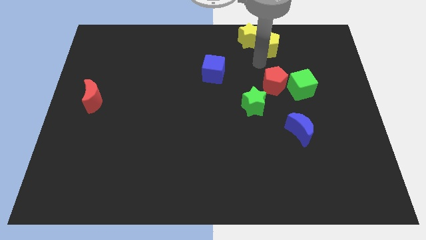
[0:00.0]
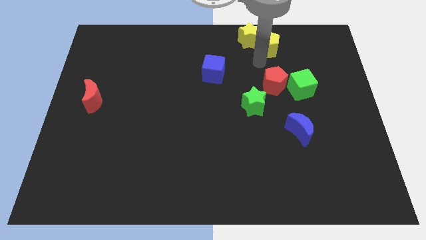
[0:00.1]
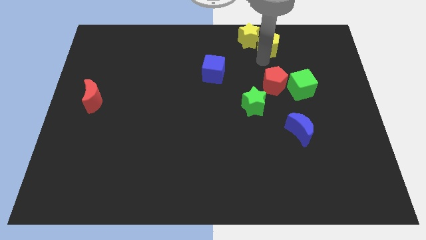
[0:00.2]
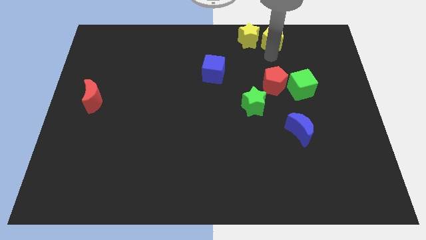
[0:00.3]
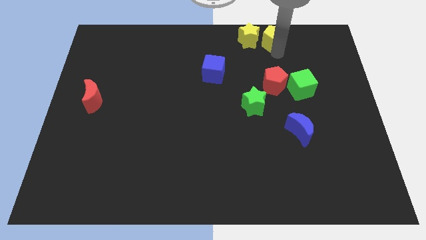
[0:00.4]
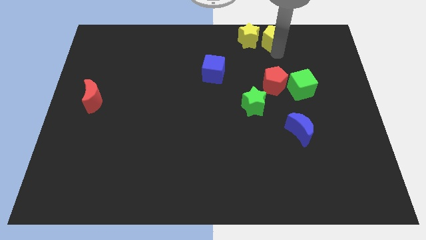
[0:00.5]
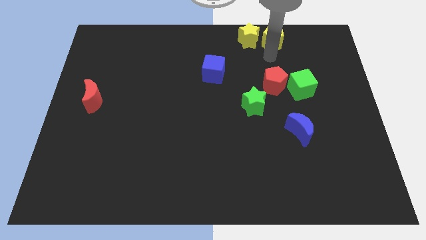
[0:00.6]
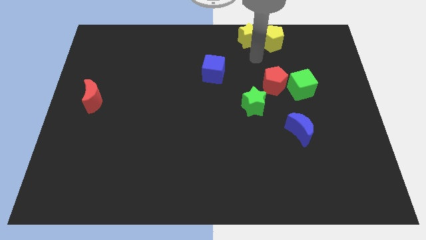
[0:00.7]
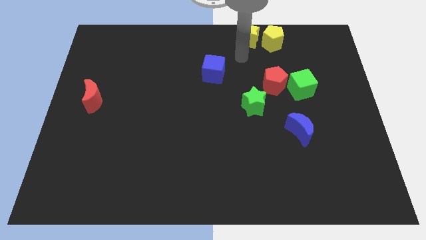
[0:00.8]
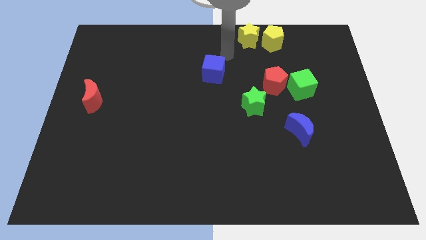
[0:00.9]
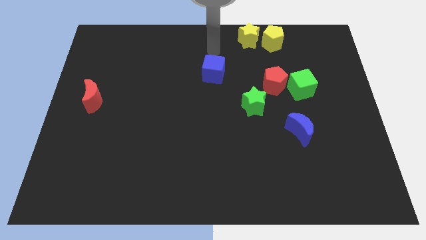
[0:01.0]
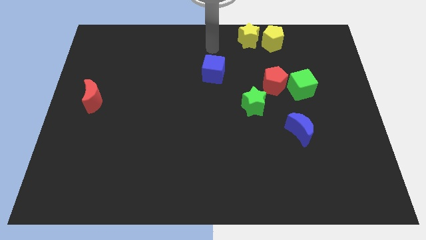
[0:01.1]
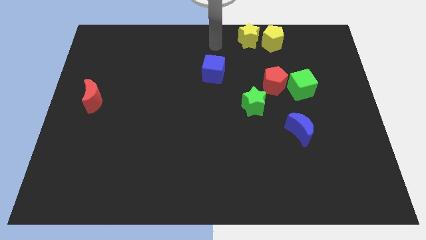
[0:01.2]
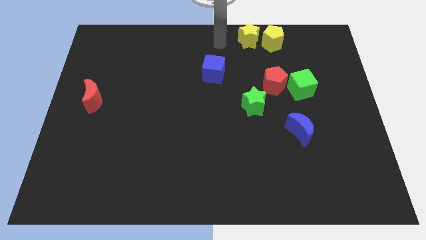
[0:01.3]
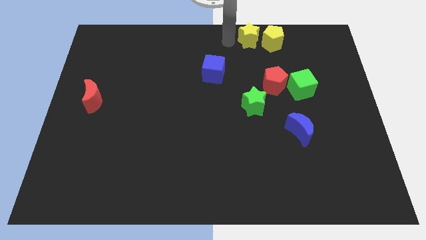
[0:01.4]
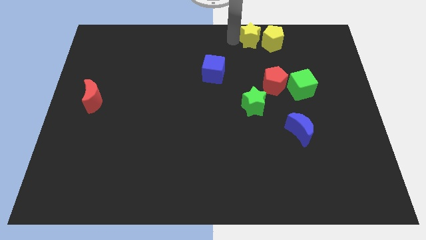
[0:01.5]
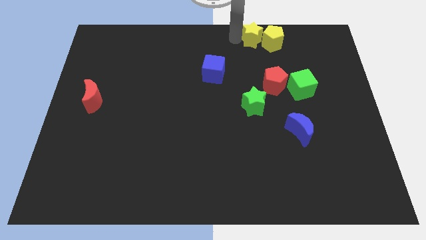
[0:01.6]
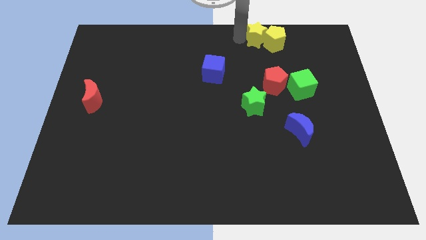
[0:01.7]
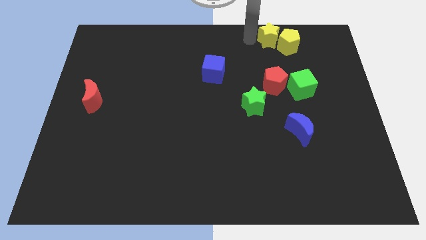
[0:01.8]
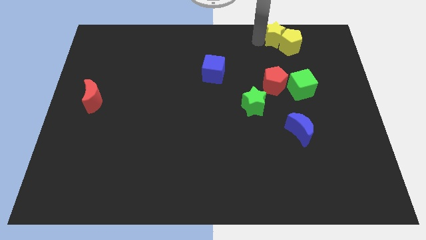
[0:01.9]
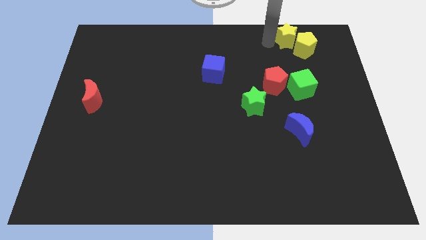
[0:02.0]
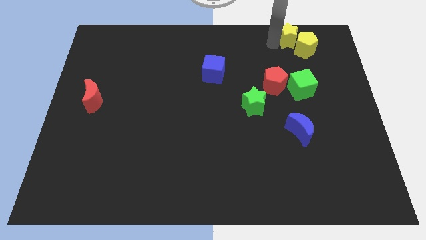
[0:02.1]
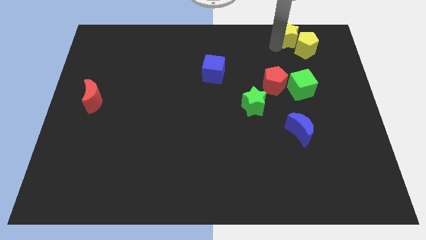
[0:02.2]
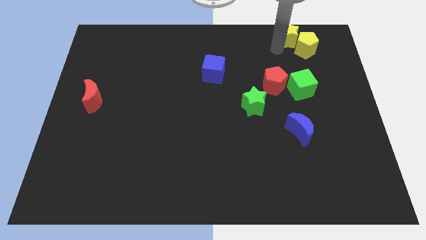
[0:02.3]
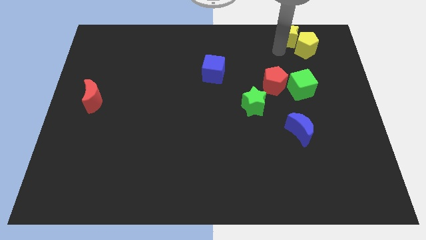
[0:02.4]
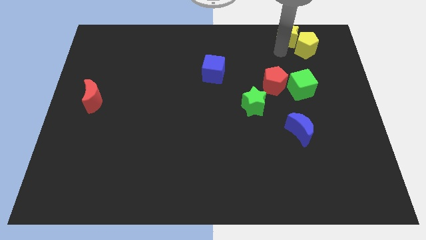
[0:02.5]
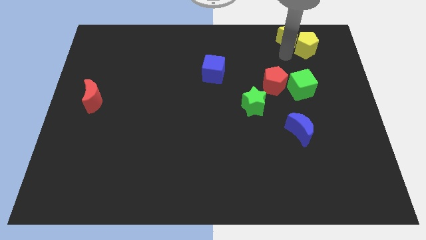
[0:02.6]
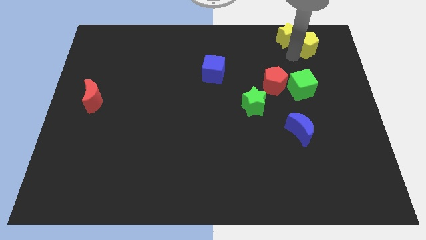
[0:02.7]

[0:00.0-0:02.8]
place the yellow blocks diagonal right to the red pentagon

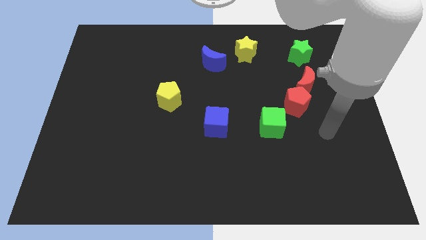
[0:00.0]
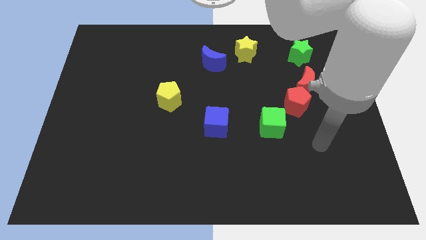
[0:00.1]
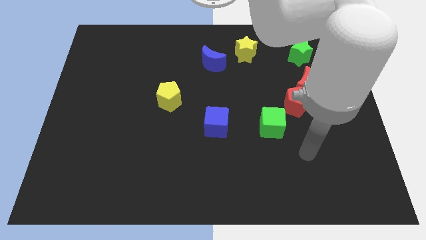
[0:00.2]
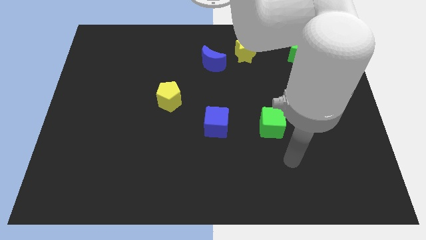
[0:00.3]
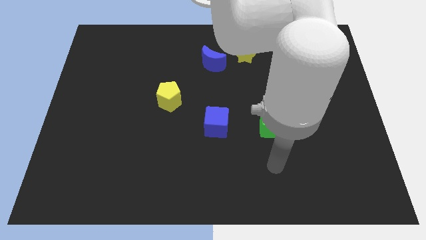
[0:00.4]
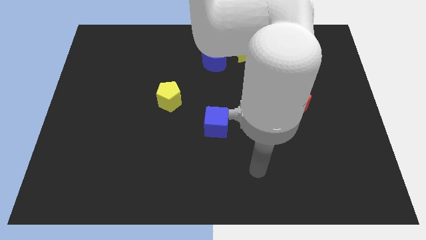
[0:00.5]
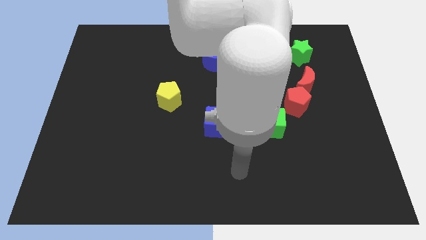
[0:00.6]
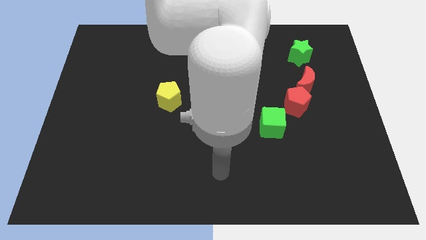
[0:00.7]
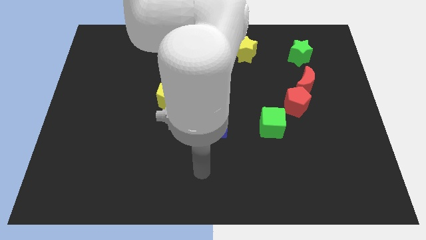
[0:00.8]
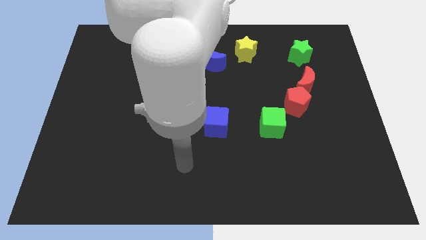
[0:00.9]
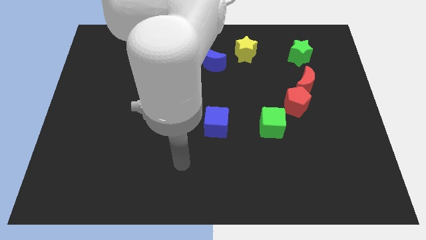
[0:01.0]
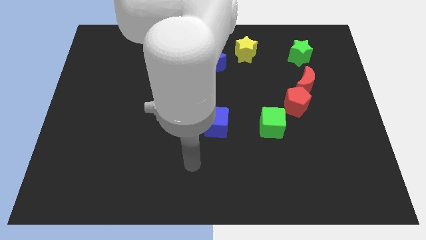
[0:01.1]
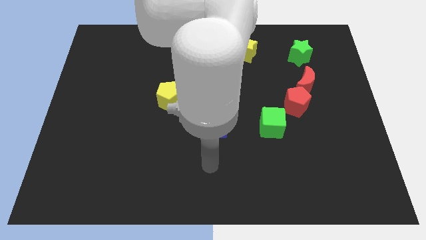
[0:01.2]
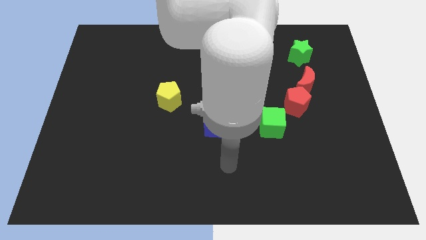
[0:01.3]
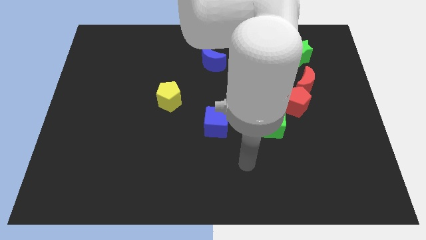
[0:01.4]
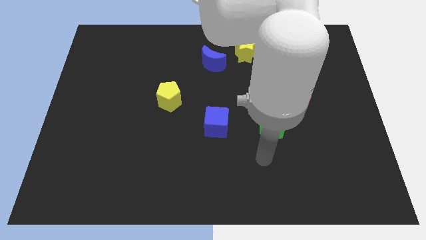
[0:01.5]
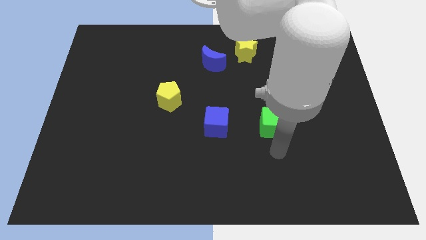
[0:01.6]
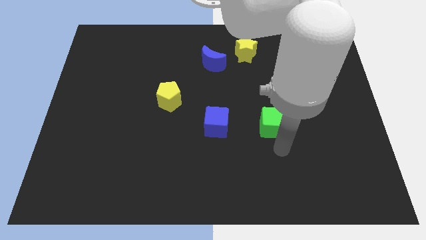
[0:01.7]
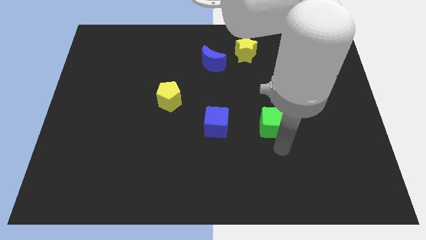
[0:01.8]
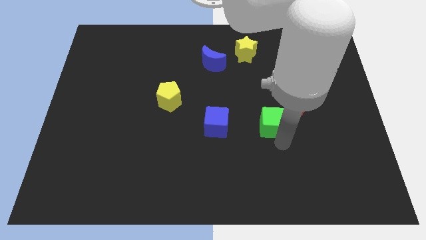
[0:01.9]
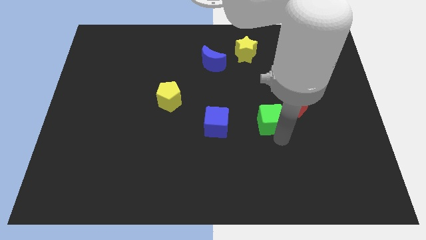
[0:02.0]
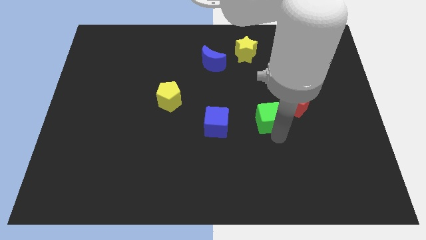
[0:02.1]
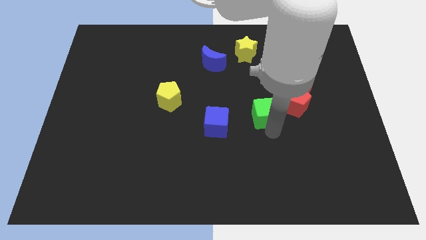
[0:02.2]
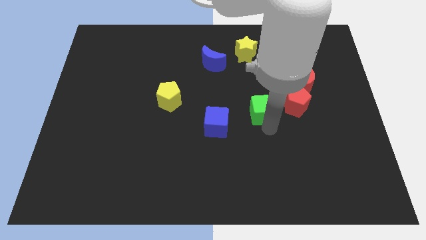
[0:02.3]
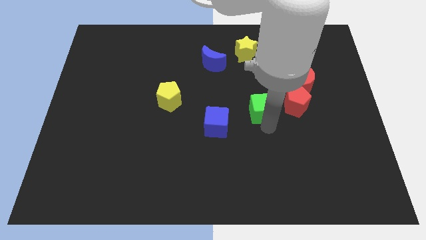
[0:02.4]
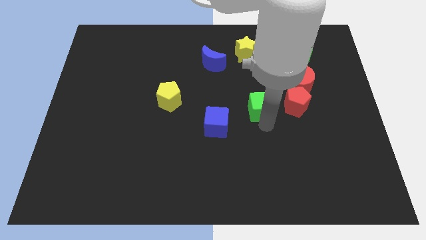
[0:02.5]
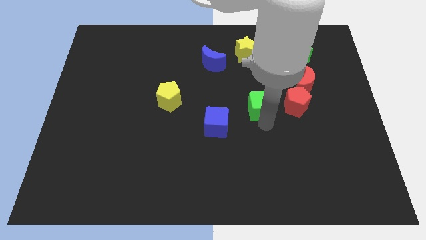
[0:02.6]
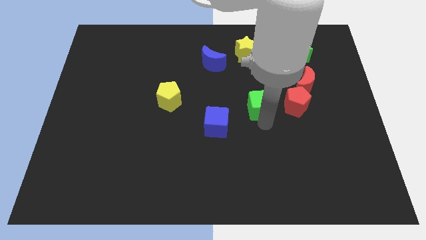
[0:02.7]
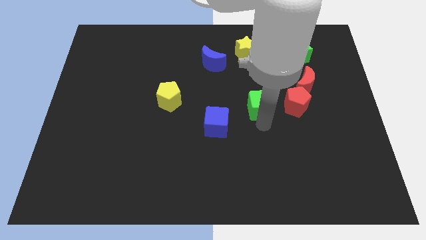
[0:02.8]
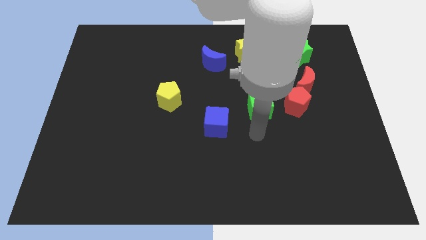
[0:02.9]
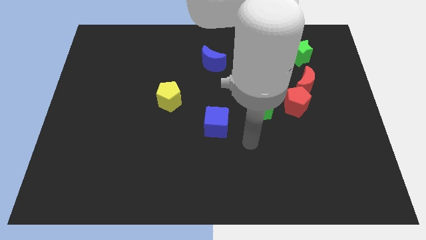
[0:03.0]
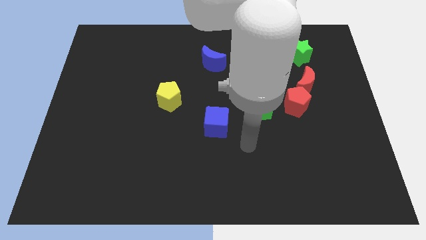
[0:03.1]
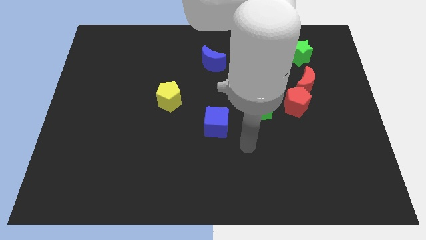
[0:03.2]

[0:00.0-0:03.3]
move the green cube upward

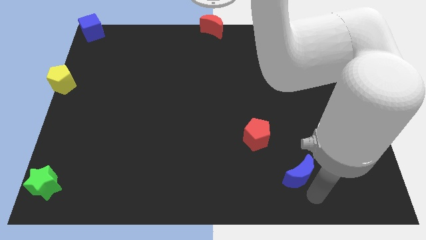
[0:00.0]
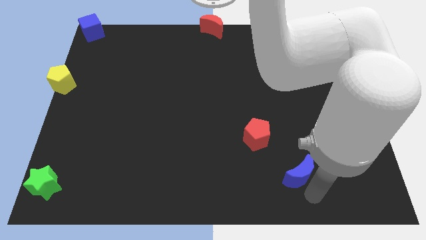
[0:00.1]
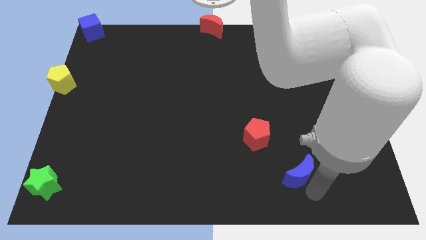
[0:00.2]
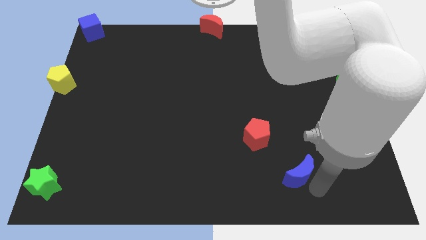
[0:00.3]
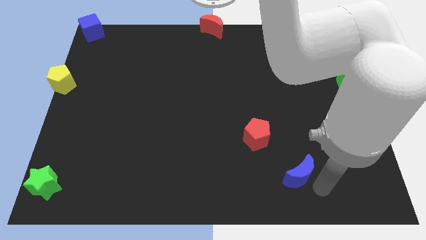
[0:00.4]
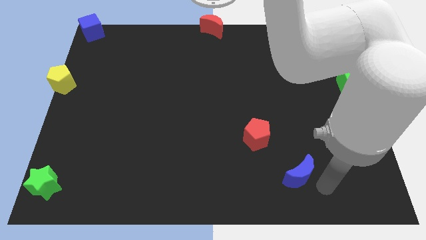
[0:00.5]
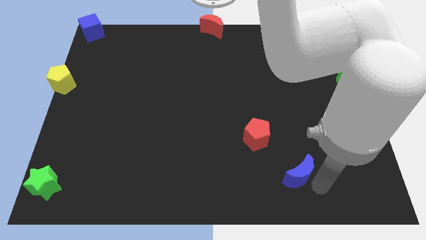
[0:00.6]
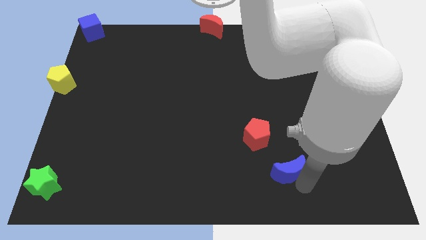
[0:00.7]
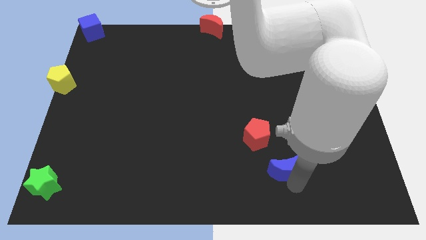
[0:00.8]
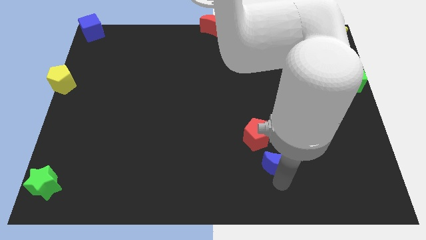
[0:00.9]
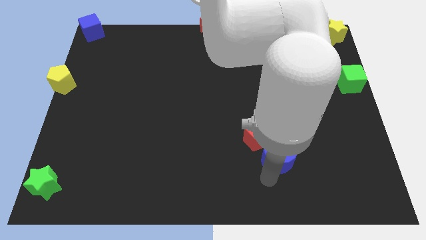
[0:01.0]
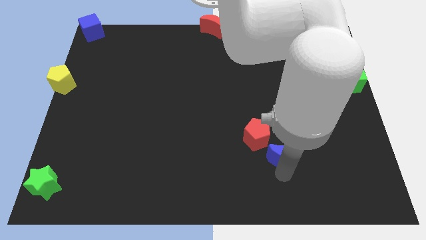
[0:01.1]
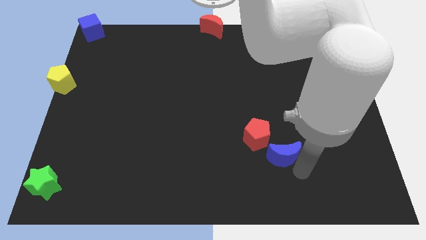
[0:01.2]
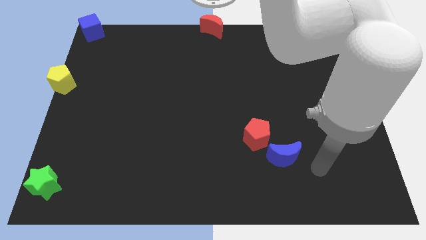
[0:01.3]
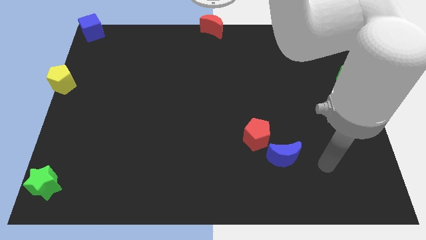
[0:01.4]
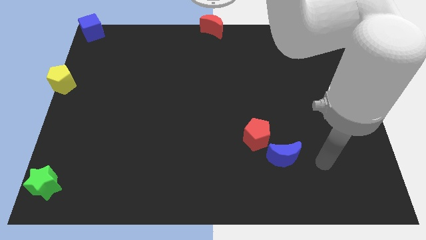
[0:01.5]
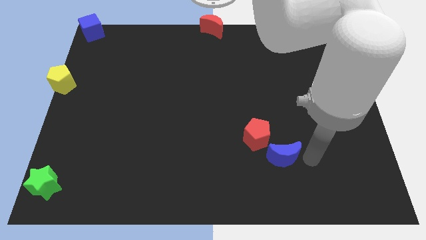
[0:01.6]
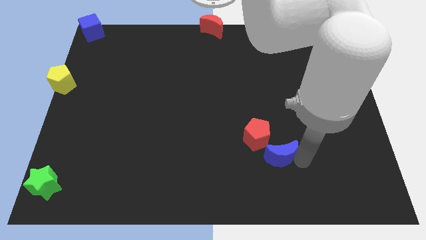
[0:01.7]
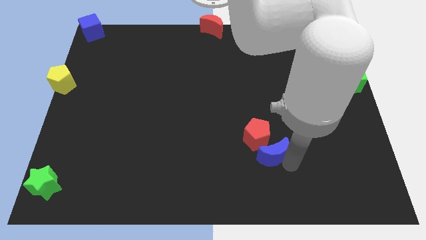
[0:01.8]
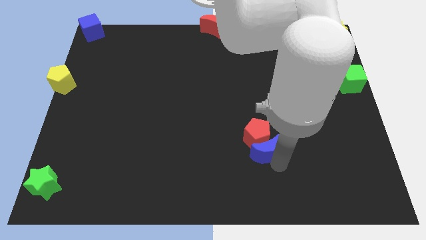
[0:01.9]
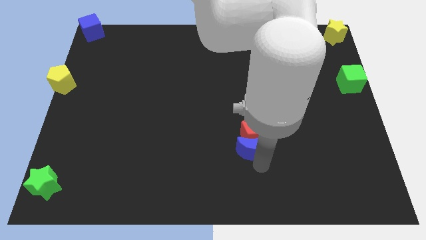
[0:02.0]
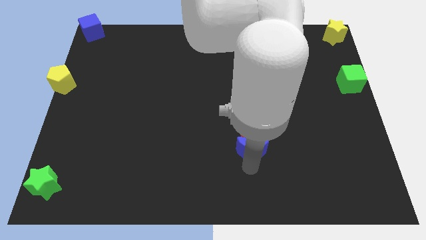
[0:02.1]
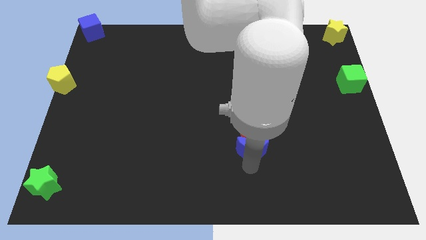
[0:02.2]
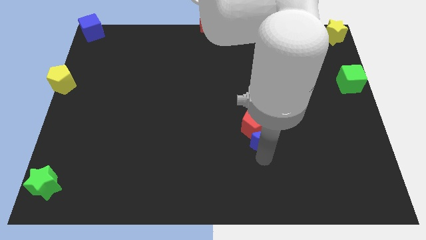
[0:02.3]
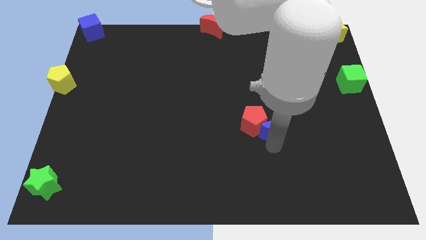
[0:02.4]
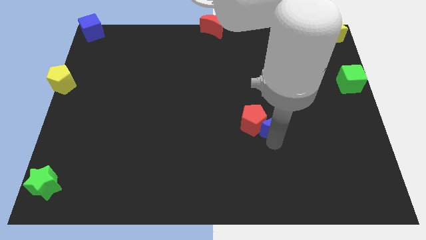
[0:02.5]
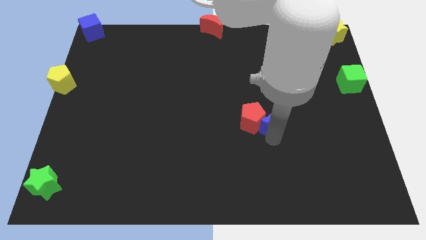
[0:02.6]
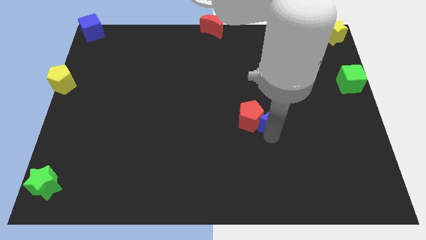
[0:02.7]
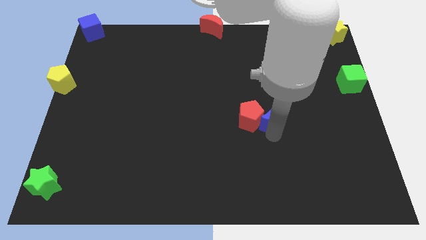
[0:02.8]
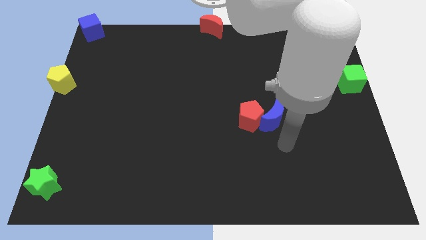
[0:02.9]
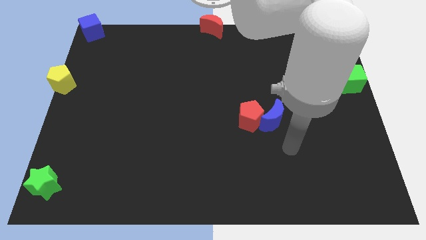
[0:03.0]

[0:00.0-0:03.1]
move the blue crescent into the red pentagon
